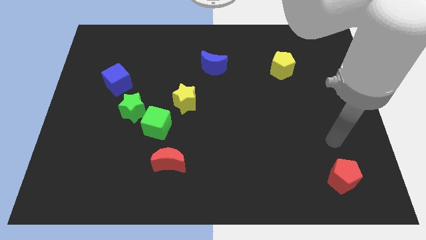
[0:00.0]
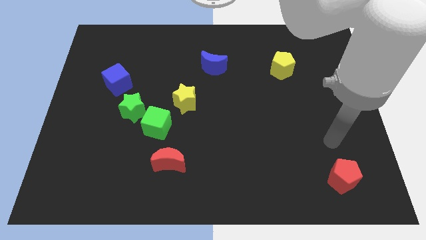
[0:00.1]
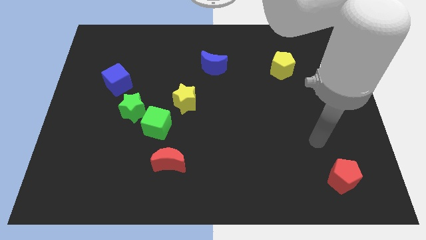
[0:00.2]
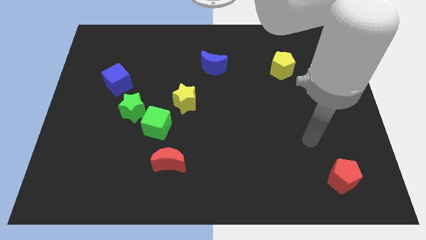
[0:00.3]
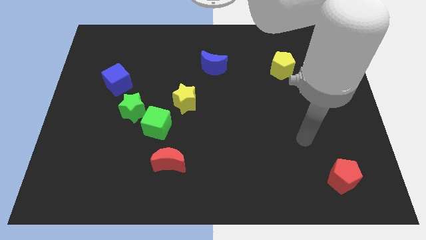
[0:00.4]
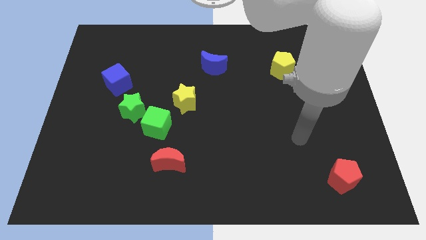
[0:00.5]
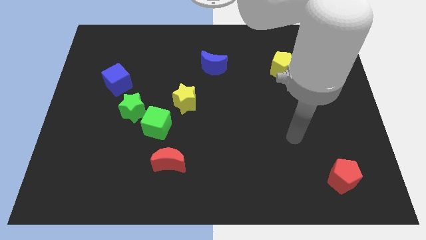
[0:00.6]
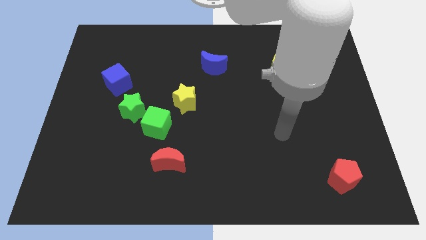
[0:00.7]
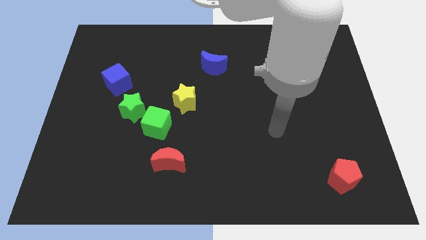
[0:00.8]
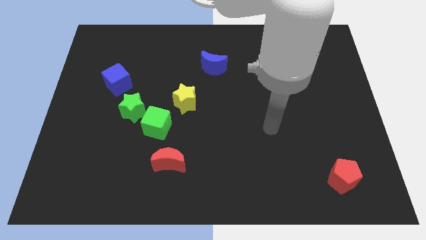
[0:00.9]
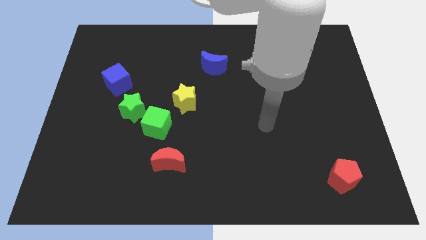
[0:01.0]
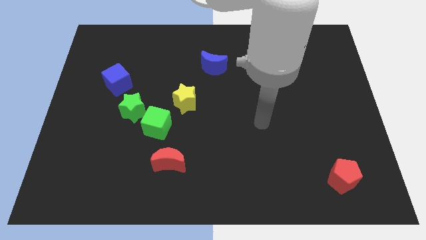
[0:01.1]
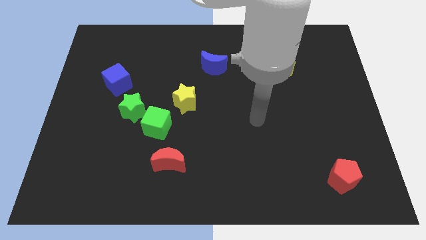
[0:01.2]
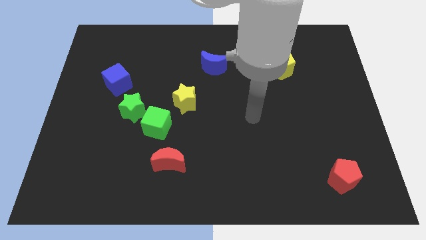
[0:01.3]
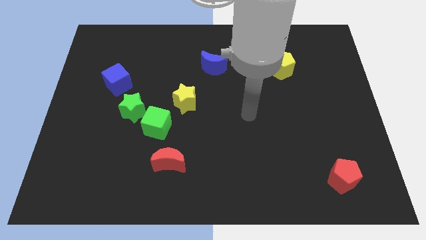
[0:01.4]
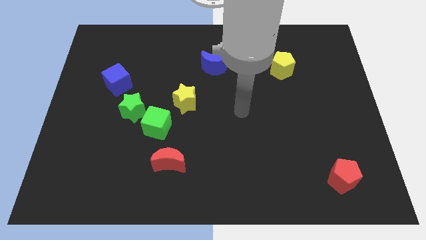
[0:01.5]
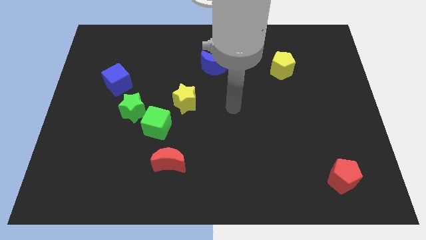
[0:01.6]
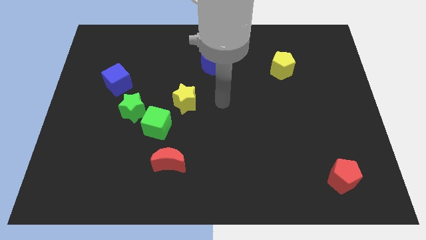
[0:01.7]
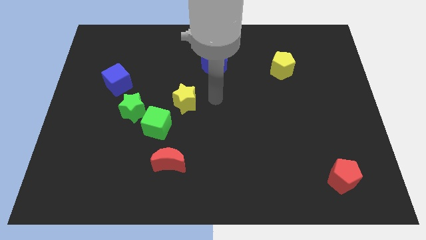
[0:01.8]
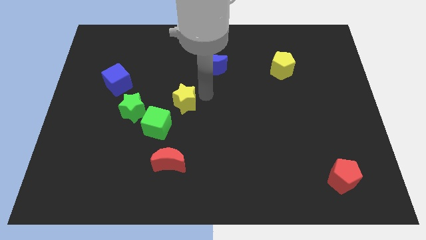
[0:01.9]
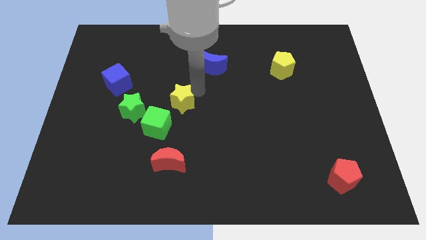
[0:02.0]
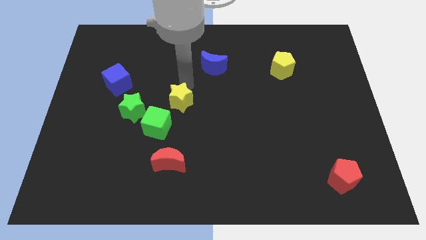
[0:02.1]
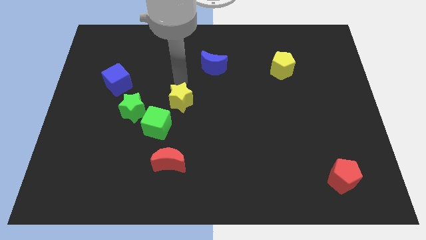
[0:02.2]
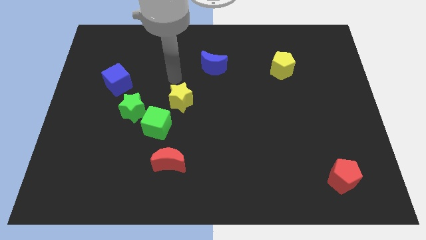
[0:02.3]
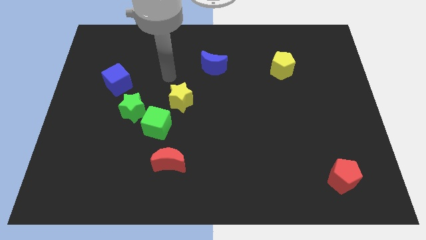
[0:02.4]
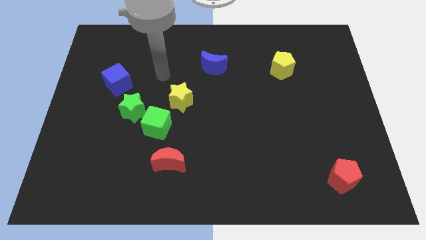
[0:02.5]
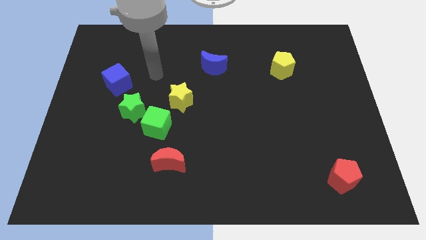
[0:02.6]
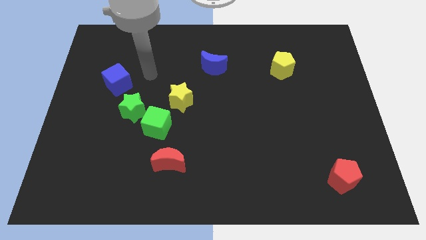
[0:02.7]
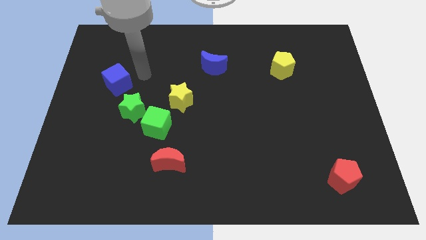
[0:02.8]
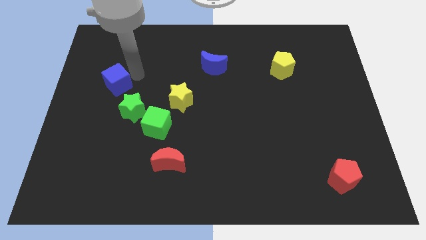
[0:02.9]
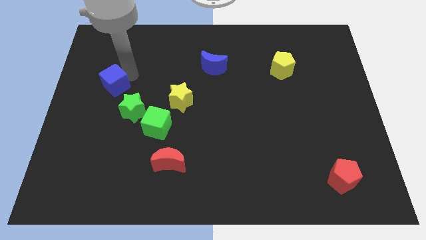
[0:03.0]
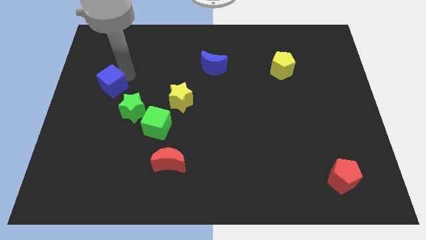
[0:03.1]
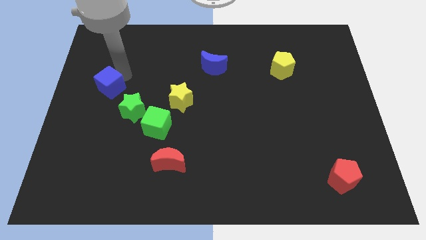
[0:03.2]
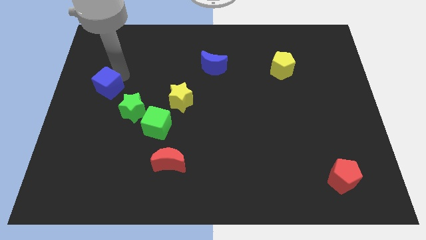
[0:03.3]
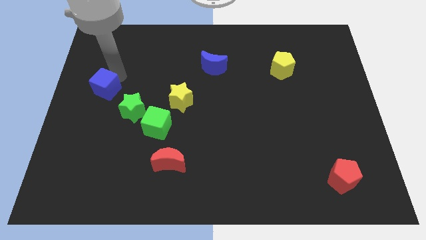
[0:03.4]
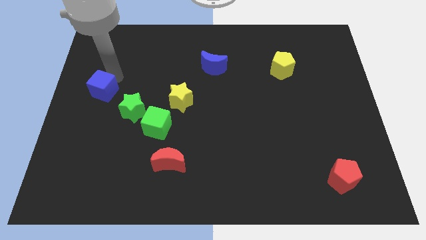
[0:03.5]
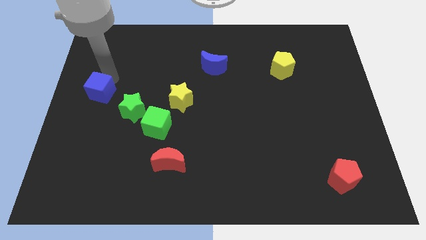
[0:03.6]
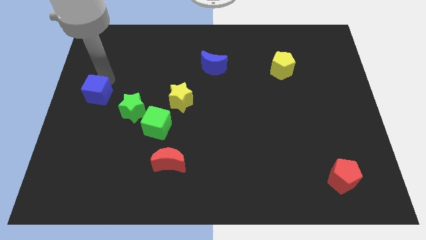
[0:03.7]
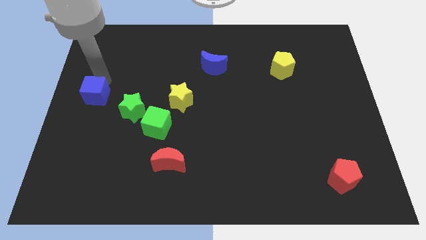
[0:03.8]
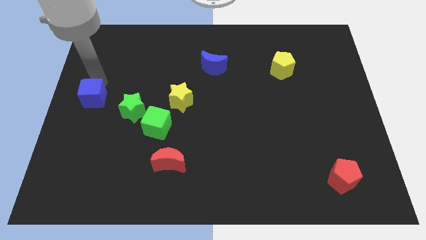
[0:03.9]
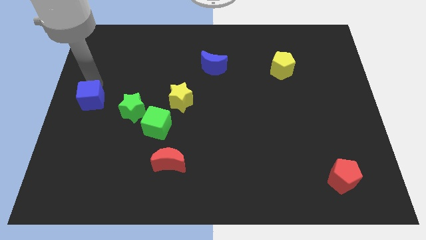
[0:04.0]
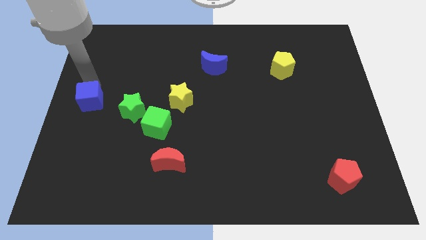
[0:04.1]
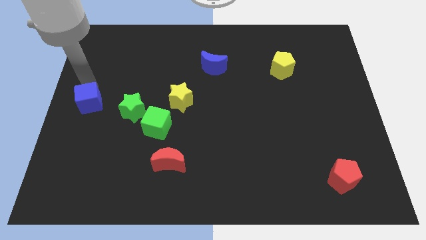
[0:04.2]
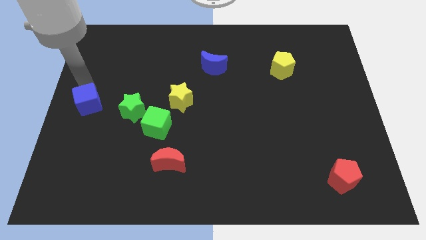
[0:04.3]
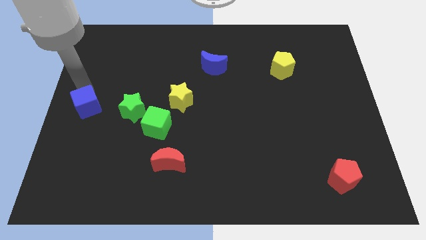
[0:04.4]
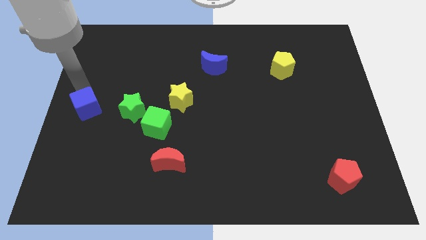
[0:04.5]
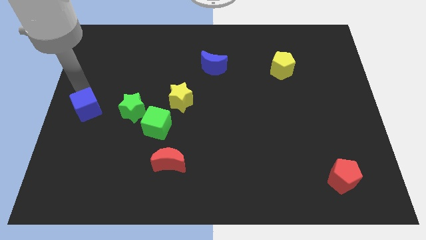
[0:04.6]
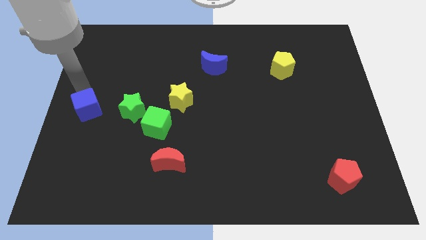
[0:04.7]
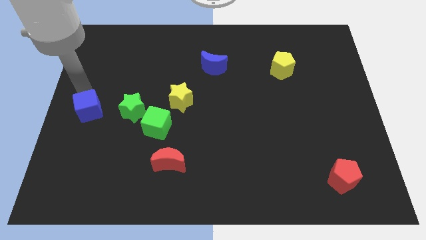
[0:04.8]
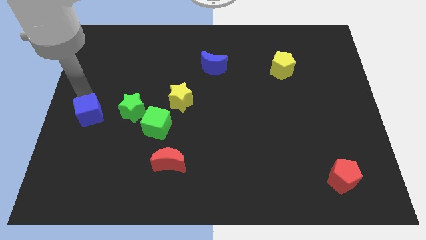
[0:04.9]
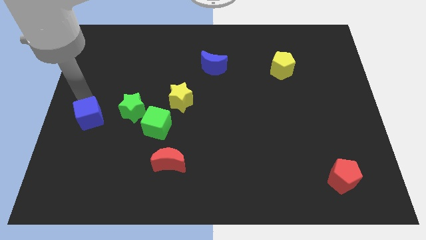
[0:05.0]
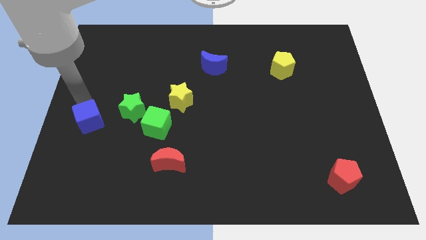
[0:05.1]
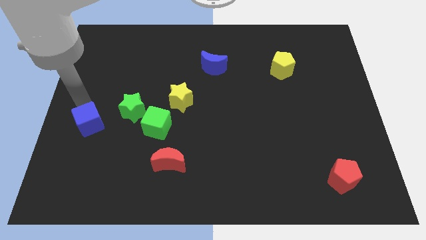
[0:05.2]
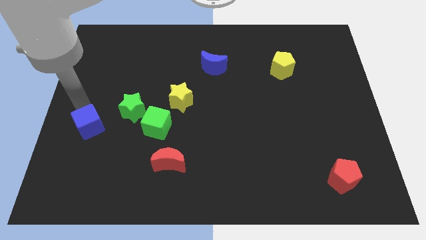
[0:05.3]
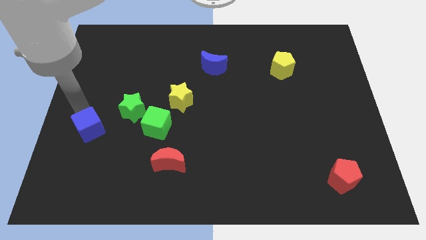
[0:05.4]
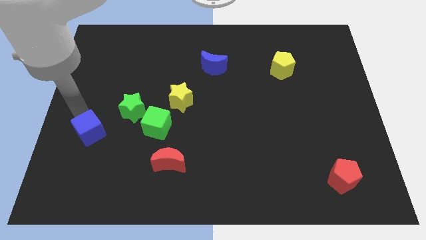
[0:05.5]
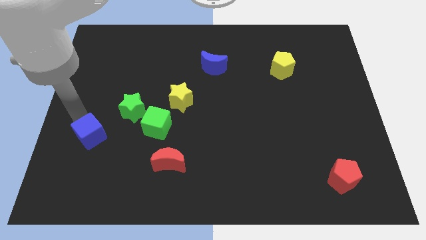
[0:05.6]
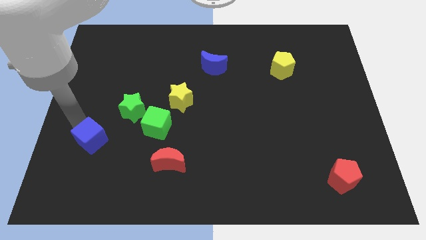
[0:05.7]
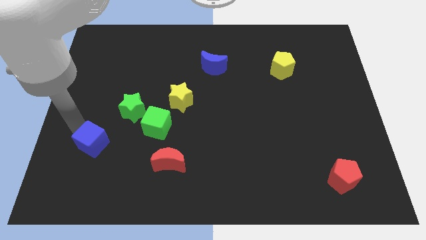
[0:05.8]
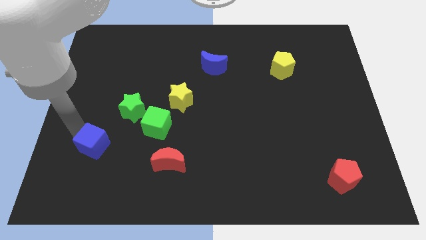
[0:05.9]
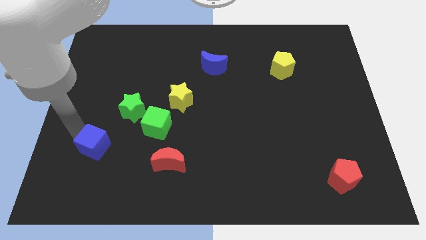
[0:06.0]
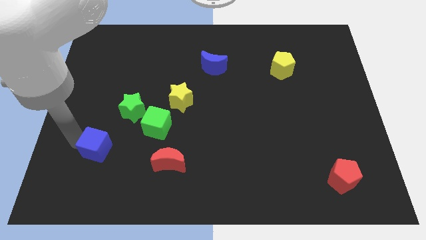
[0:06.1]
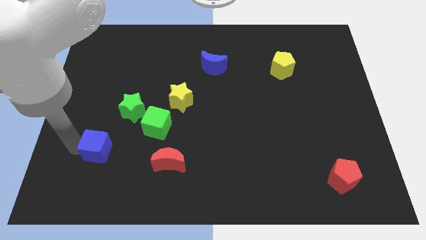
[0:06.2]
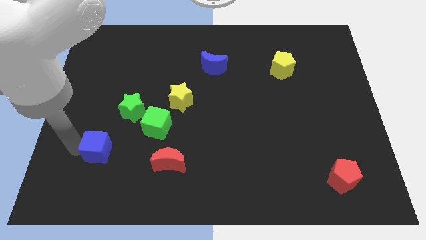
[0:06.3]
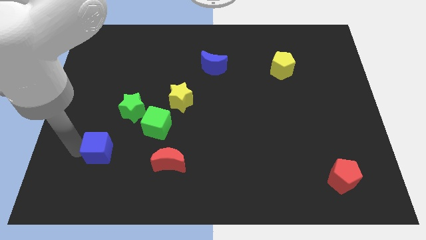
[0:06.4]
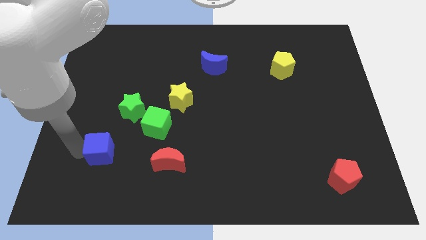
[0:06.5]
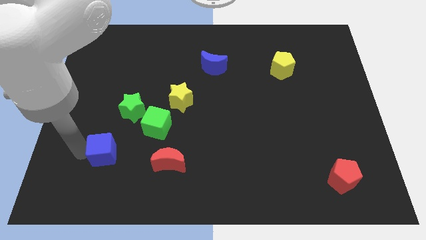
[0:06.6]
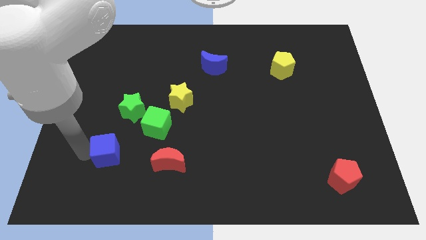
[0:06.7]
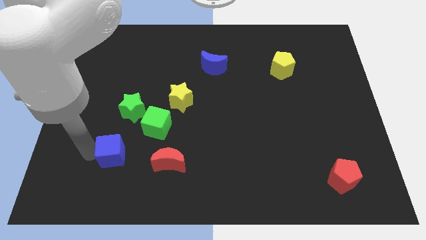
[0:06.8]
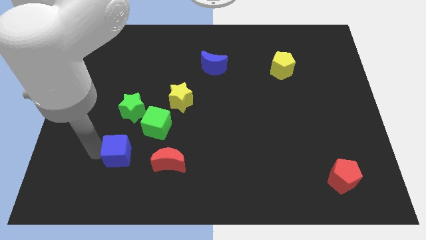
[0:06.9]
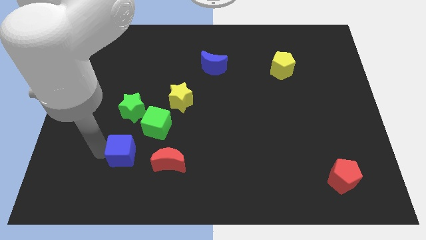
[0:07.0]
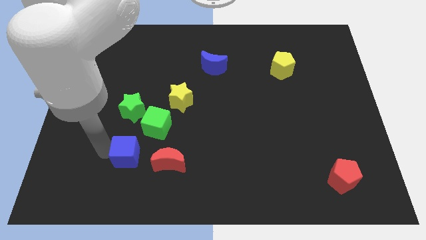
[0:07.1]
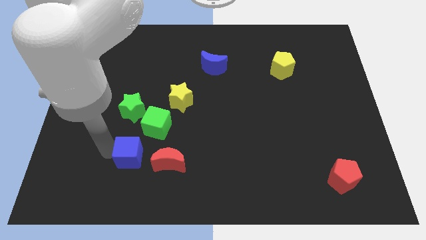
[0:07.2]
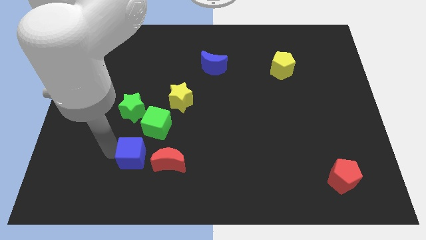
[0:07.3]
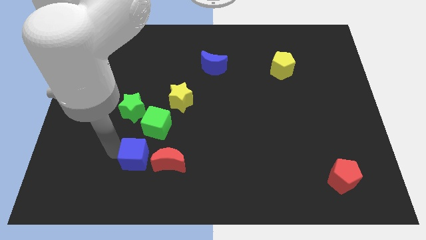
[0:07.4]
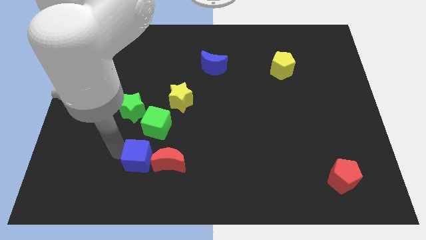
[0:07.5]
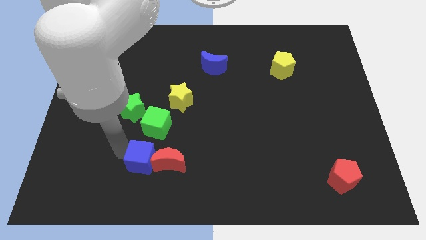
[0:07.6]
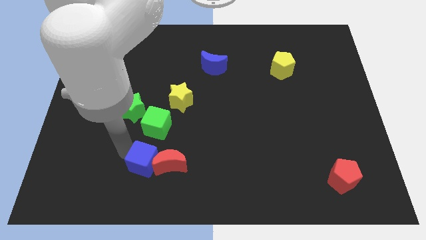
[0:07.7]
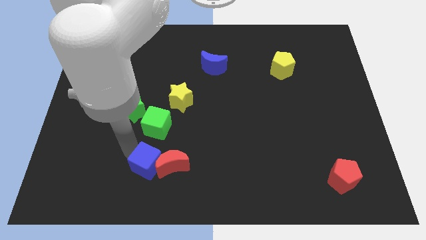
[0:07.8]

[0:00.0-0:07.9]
push the blue cube close to the red moon

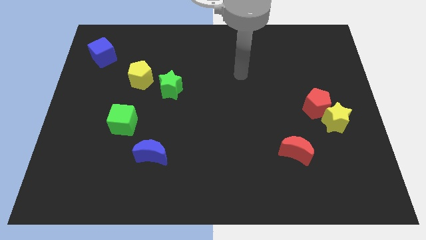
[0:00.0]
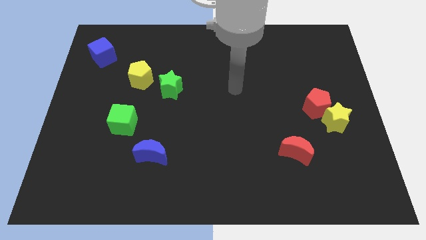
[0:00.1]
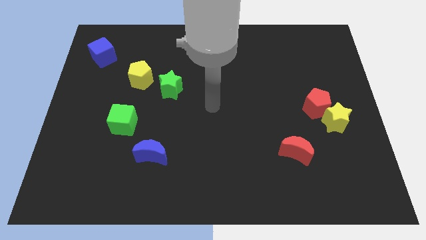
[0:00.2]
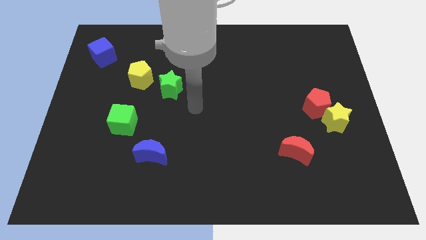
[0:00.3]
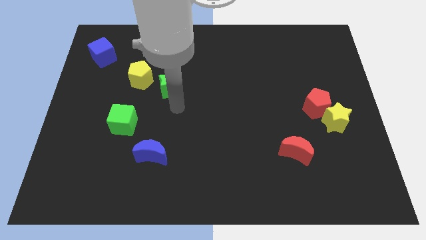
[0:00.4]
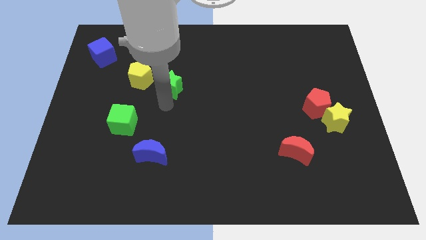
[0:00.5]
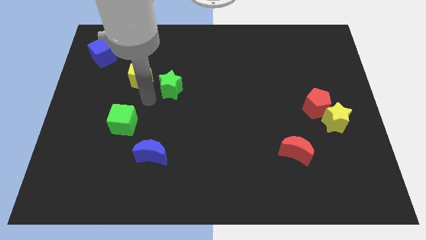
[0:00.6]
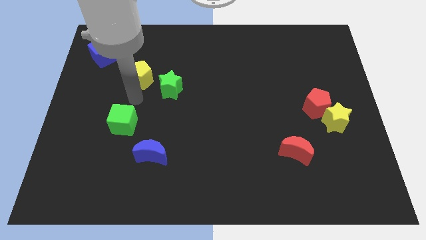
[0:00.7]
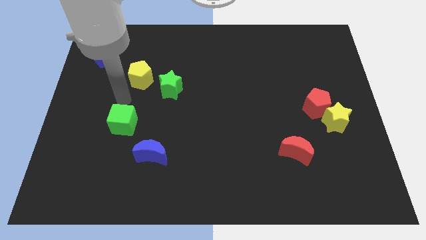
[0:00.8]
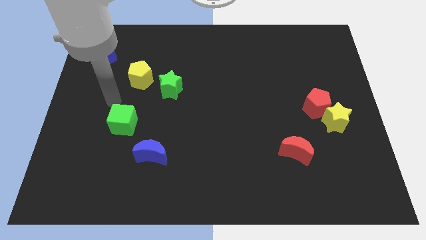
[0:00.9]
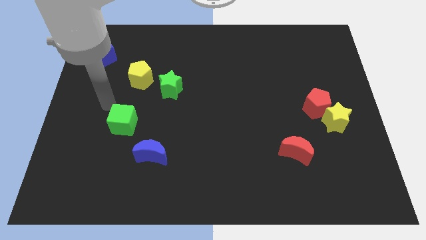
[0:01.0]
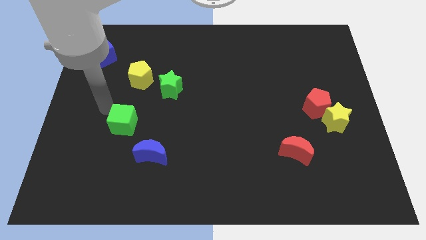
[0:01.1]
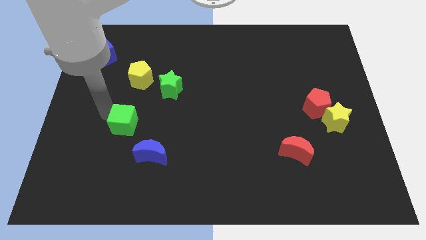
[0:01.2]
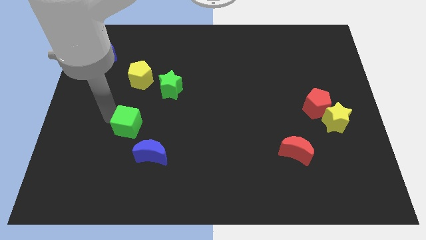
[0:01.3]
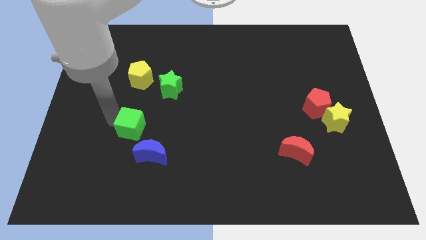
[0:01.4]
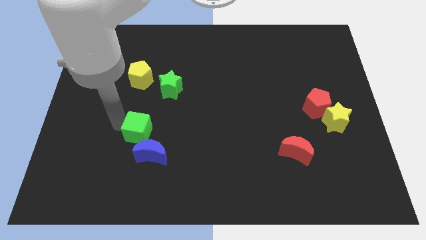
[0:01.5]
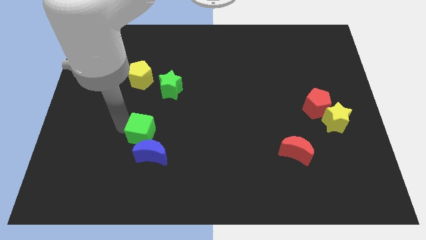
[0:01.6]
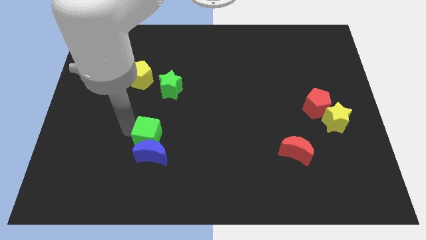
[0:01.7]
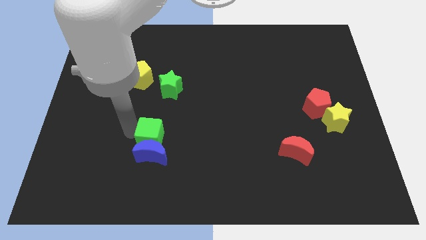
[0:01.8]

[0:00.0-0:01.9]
move the green cube to the blue moon
